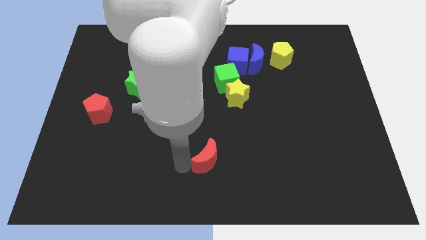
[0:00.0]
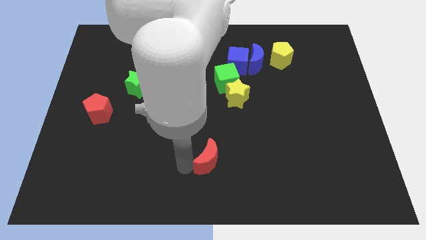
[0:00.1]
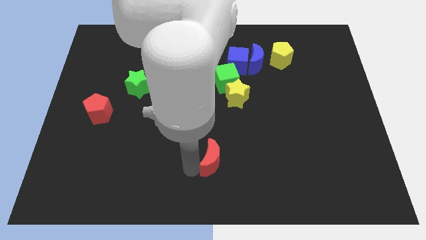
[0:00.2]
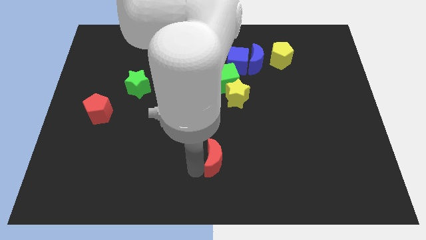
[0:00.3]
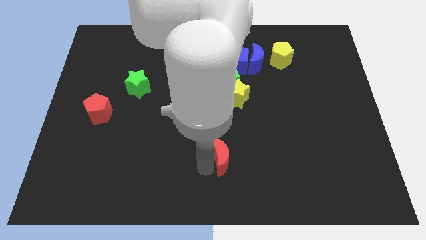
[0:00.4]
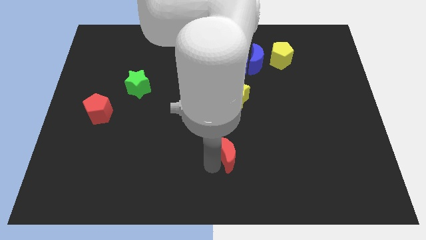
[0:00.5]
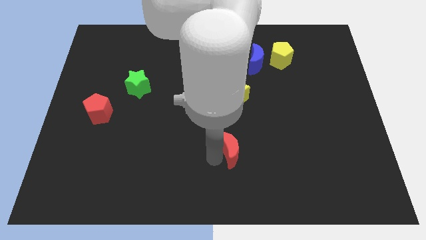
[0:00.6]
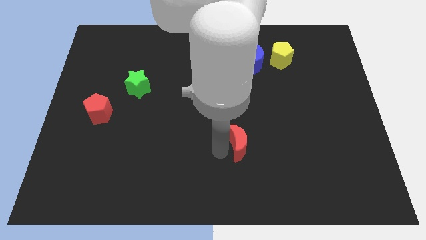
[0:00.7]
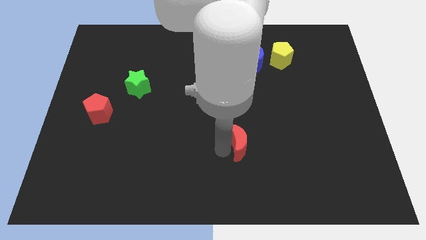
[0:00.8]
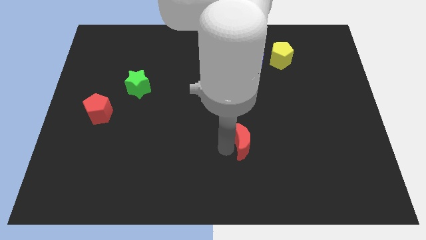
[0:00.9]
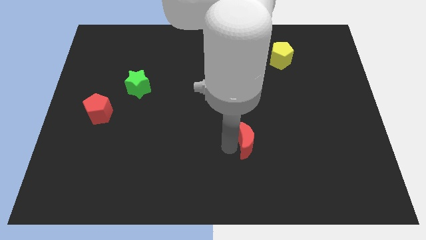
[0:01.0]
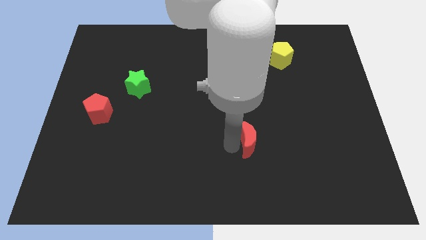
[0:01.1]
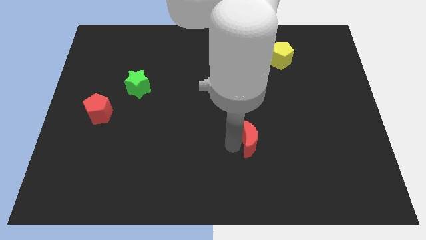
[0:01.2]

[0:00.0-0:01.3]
push the red moon below the yellow star

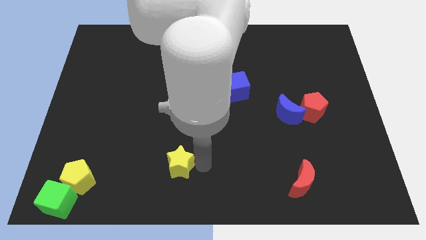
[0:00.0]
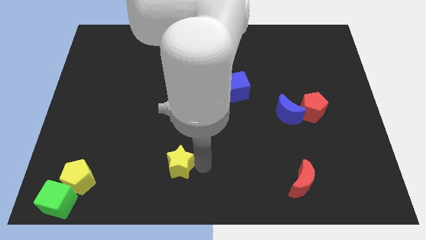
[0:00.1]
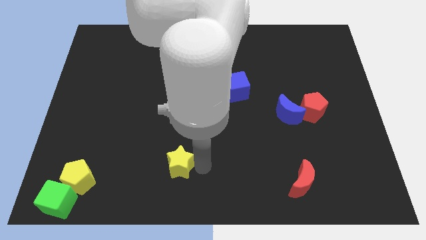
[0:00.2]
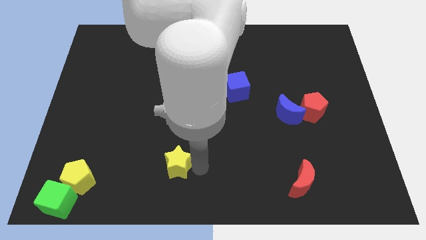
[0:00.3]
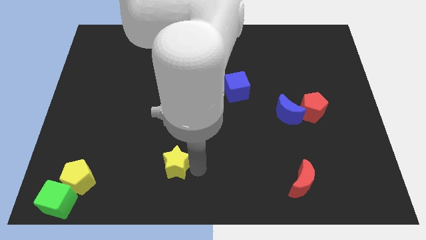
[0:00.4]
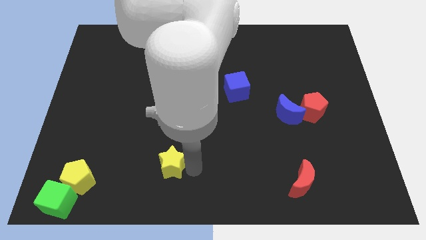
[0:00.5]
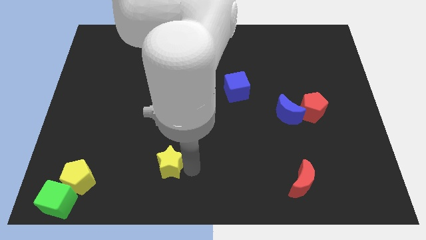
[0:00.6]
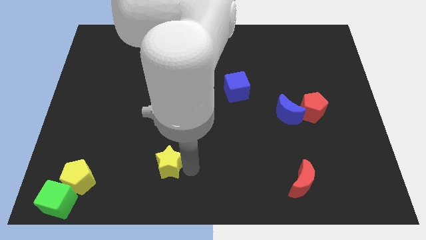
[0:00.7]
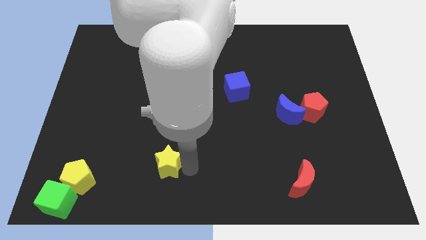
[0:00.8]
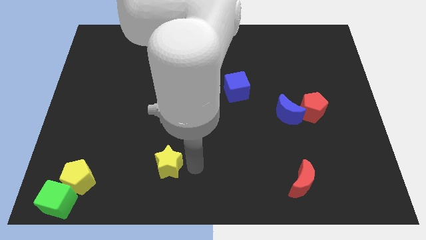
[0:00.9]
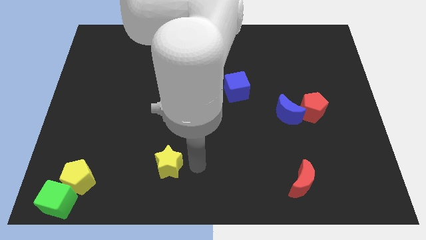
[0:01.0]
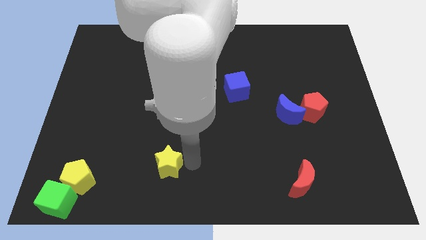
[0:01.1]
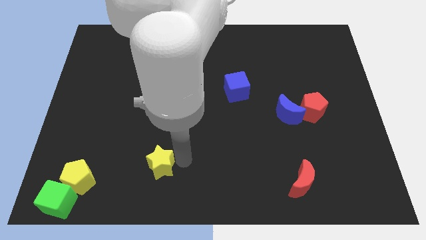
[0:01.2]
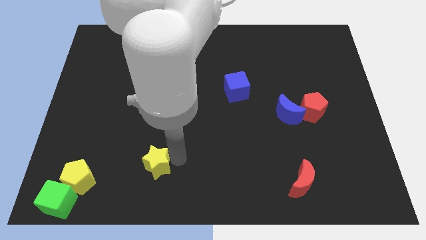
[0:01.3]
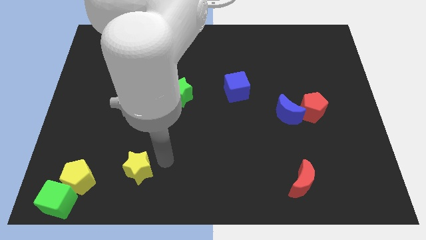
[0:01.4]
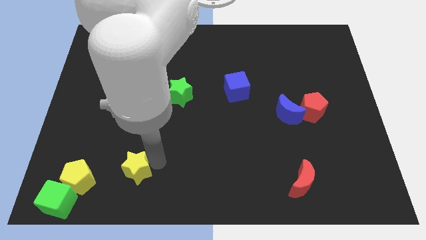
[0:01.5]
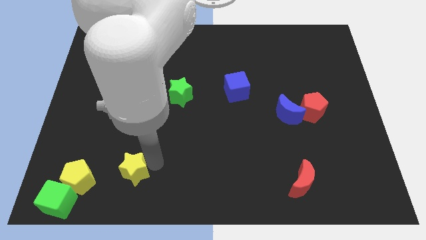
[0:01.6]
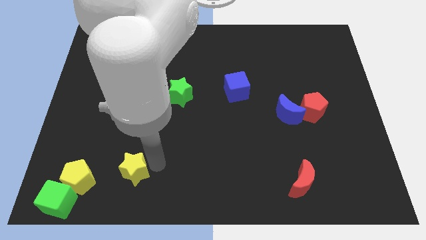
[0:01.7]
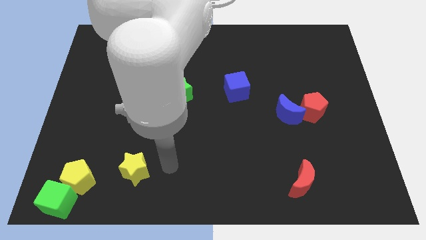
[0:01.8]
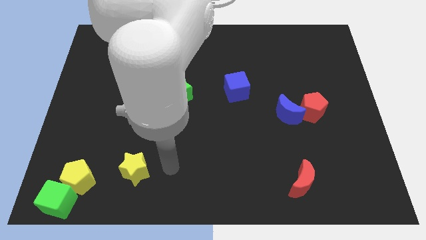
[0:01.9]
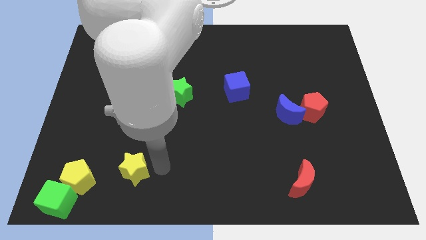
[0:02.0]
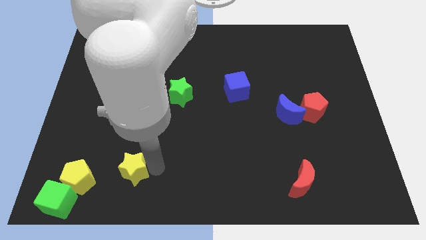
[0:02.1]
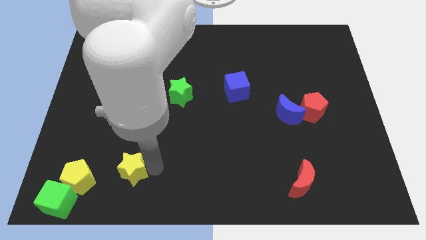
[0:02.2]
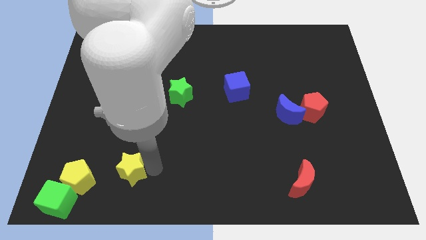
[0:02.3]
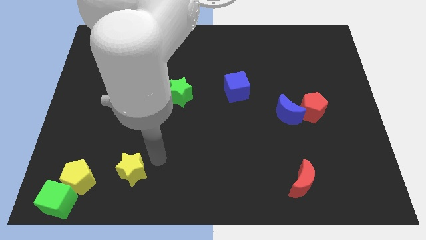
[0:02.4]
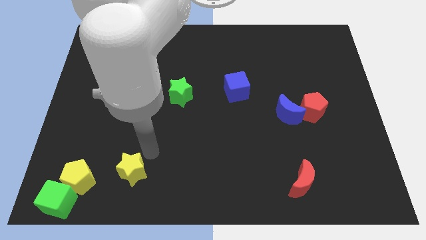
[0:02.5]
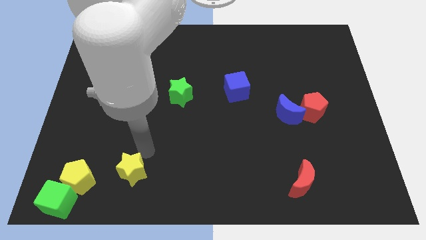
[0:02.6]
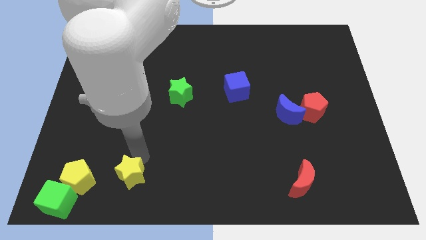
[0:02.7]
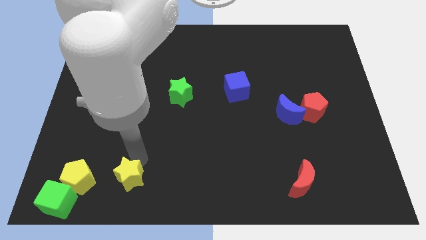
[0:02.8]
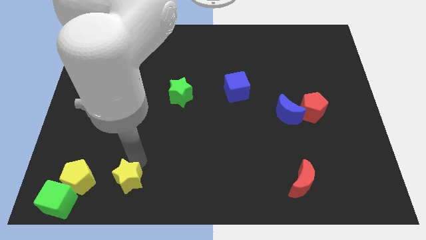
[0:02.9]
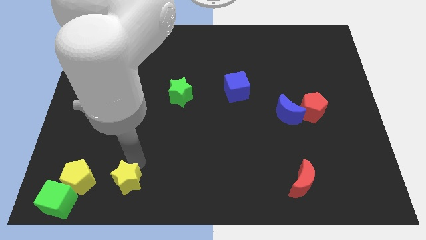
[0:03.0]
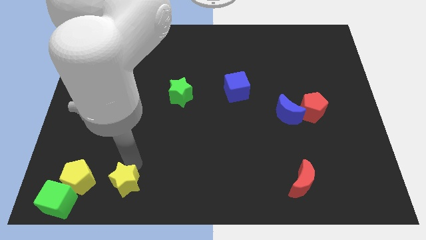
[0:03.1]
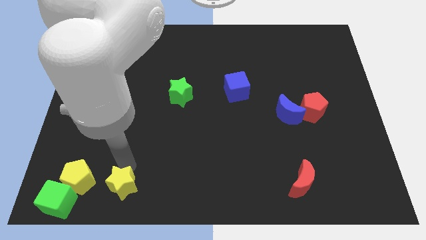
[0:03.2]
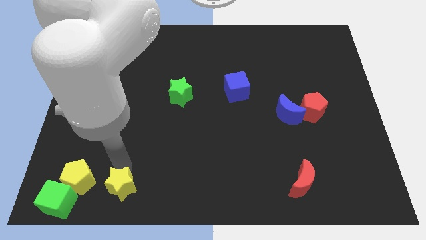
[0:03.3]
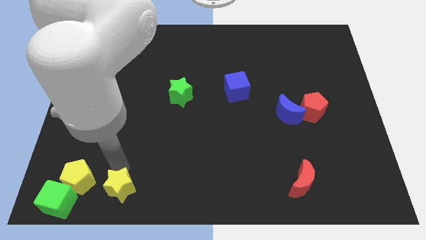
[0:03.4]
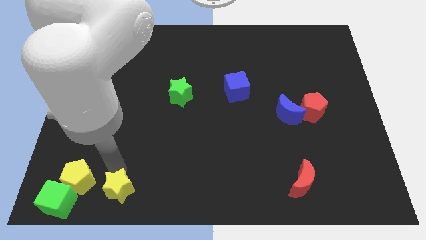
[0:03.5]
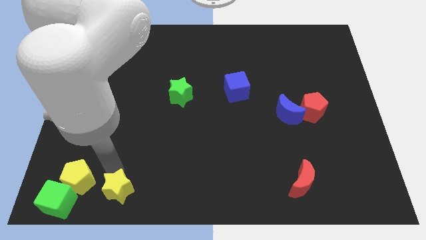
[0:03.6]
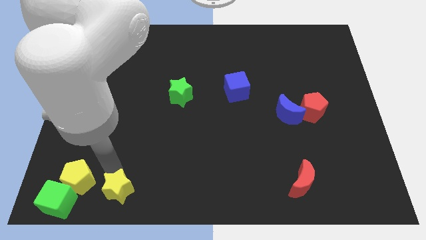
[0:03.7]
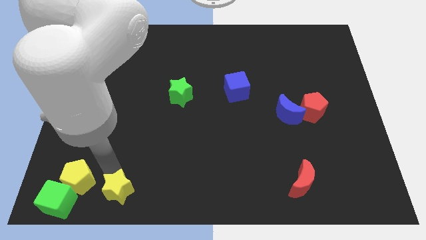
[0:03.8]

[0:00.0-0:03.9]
slide the yellow star parallel right to the yellow pentagon

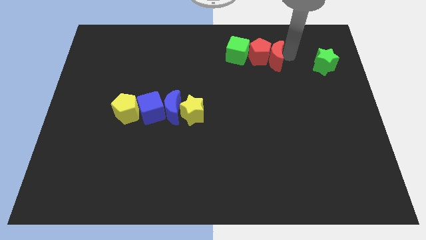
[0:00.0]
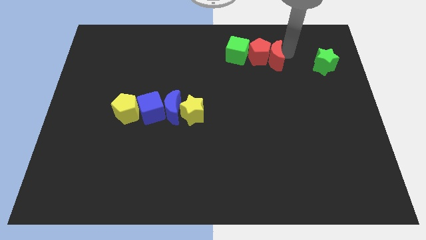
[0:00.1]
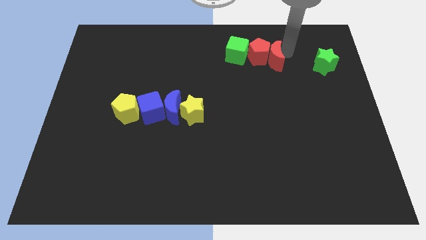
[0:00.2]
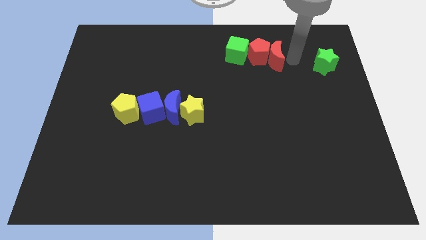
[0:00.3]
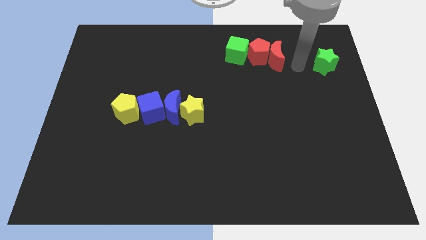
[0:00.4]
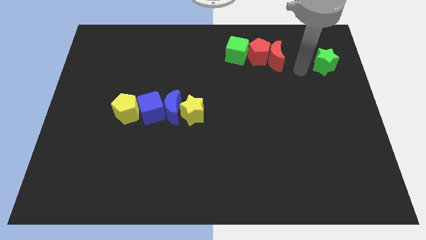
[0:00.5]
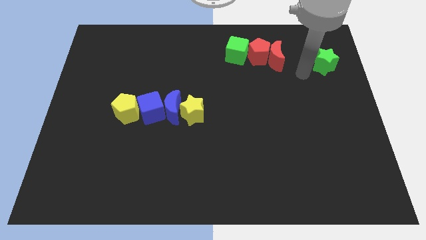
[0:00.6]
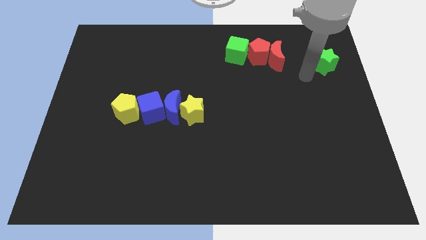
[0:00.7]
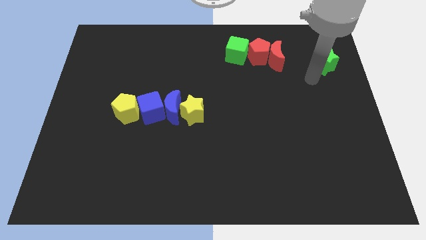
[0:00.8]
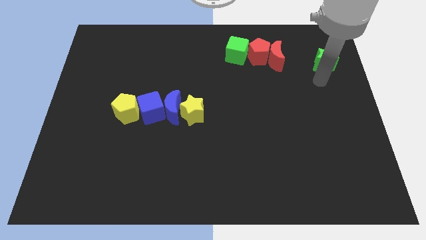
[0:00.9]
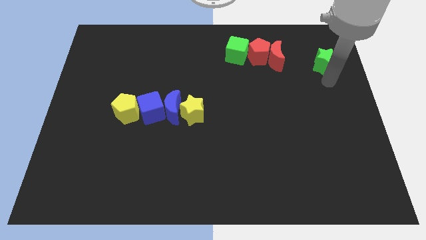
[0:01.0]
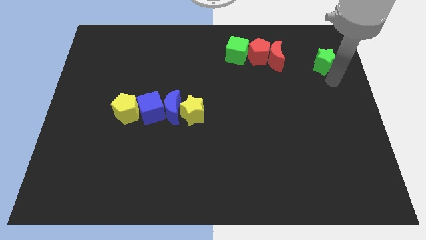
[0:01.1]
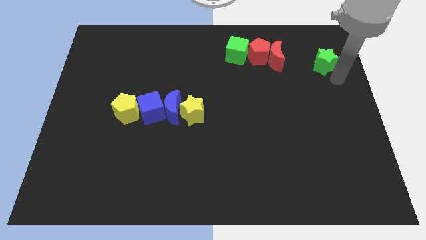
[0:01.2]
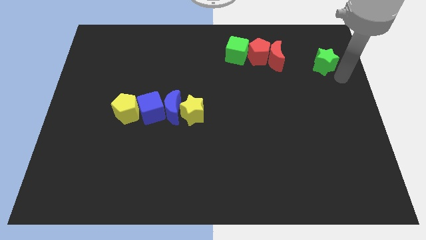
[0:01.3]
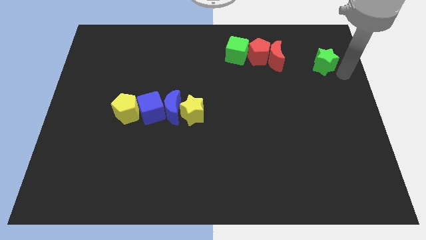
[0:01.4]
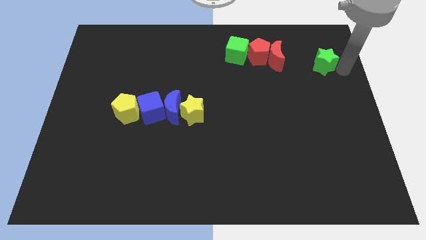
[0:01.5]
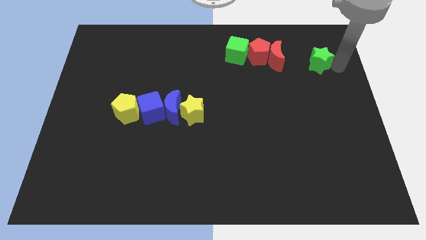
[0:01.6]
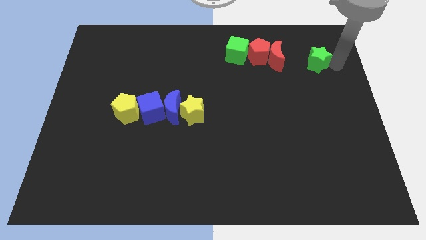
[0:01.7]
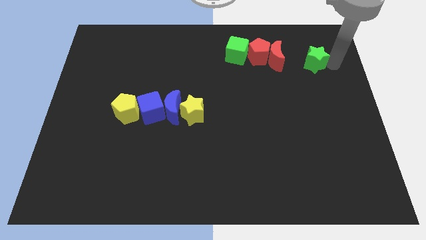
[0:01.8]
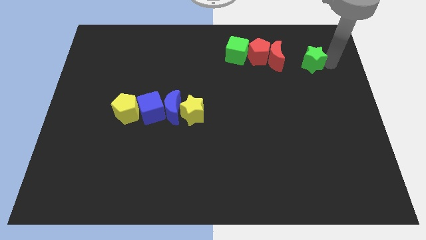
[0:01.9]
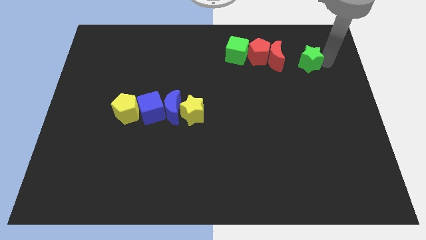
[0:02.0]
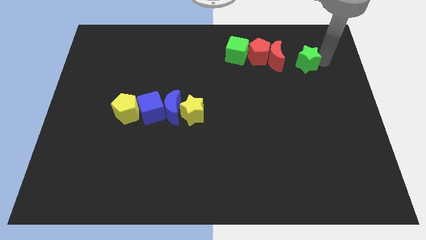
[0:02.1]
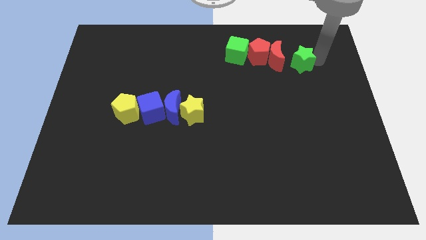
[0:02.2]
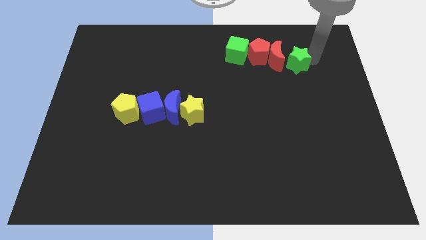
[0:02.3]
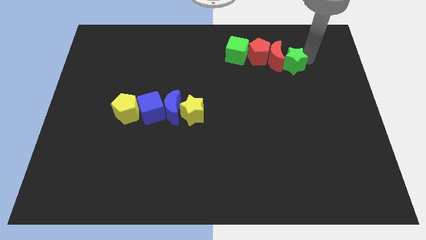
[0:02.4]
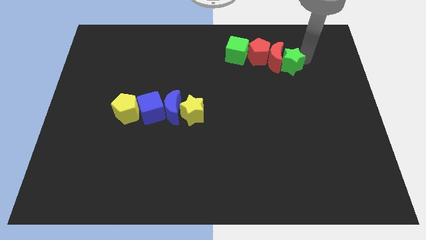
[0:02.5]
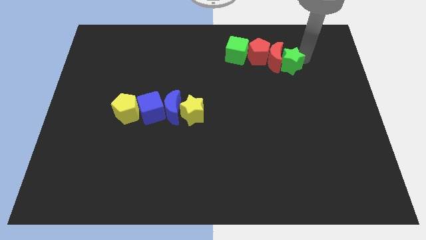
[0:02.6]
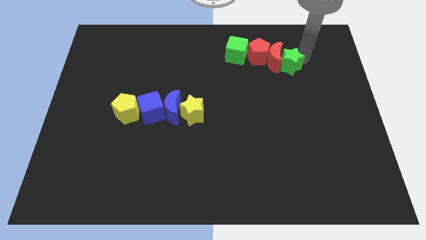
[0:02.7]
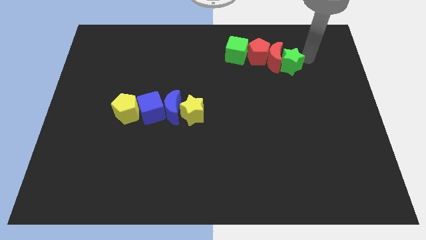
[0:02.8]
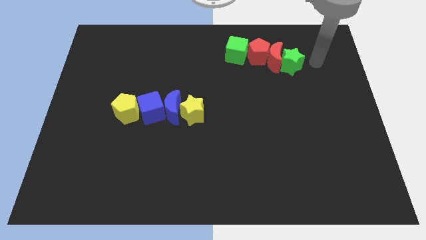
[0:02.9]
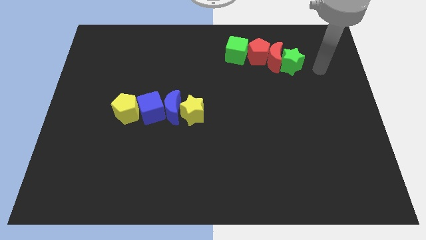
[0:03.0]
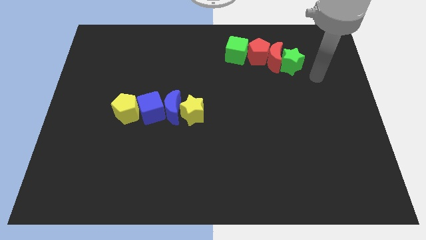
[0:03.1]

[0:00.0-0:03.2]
move the green star at the right side of the red crescent

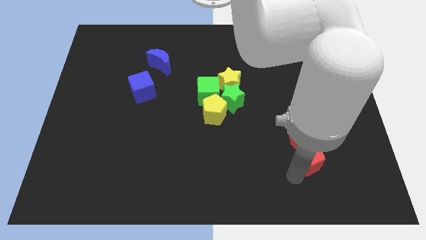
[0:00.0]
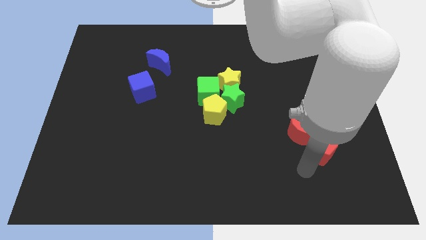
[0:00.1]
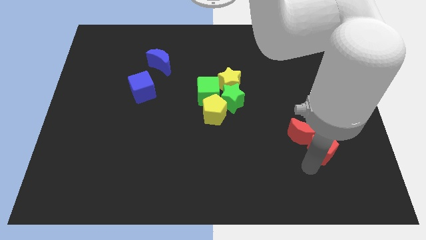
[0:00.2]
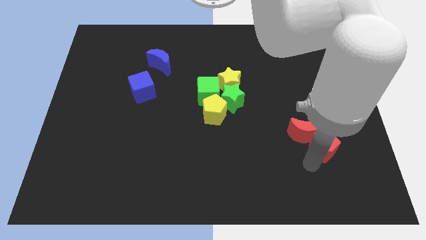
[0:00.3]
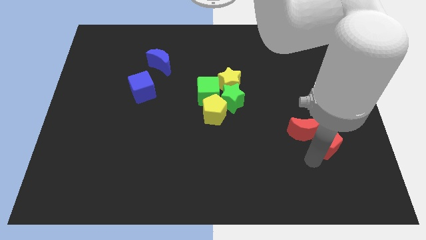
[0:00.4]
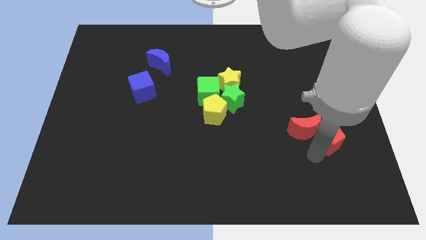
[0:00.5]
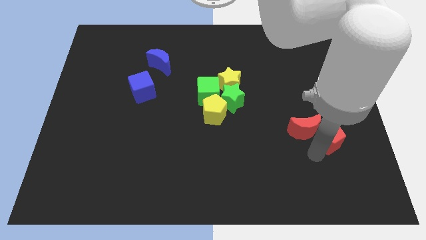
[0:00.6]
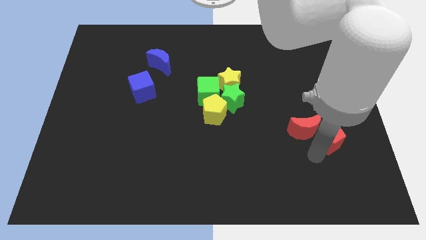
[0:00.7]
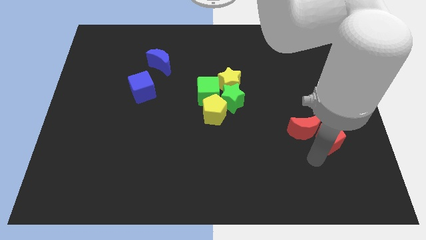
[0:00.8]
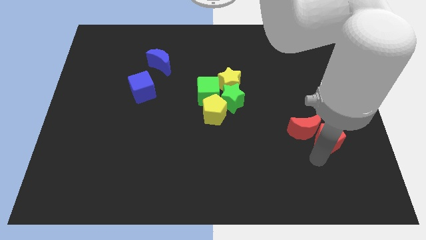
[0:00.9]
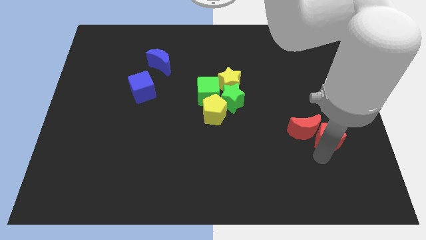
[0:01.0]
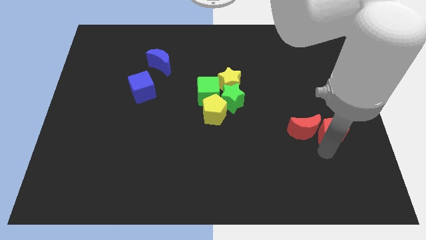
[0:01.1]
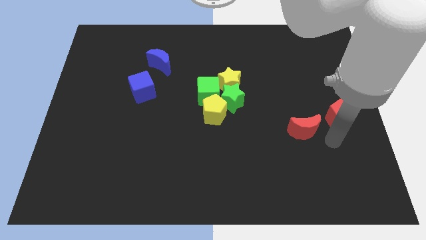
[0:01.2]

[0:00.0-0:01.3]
push the red pentagon to the right of the red crescent
